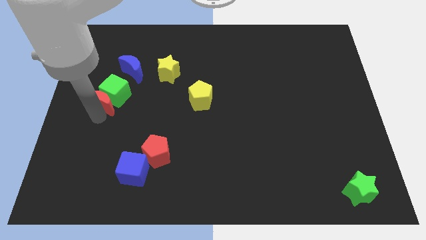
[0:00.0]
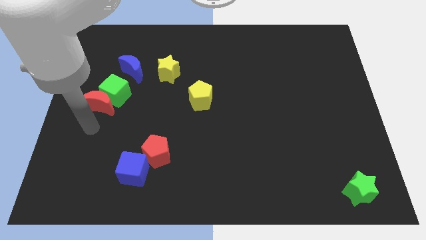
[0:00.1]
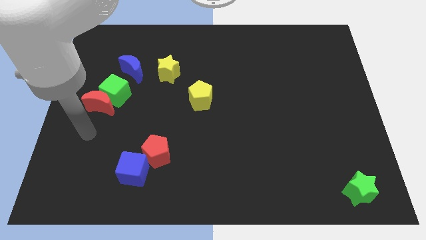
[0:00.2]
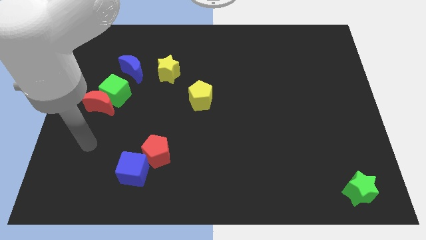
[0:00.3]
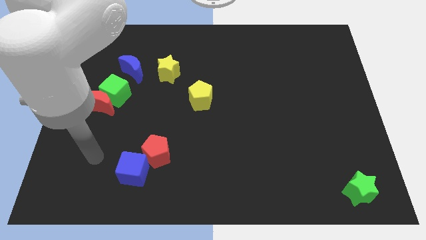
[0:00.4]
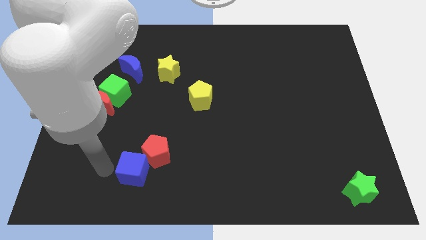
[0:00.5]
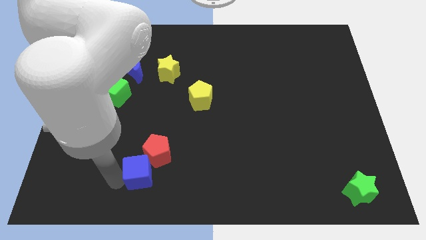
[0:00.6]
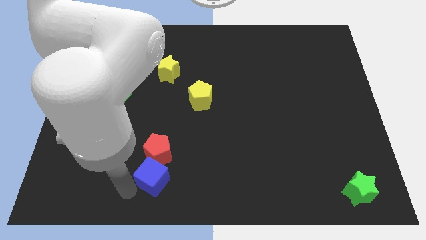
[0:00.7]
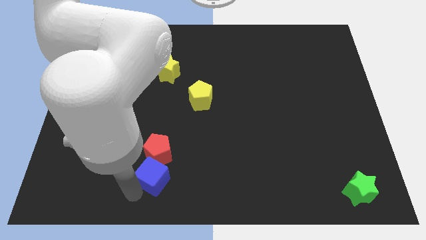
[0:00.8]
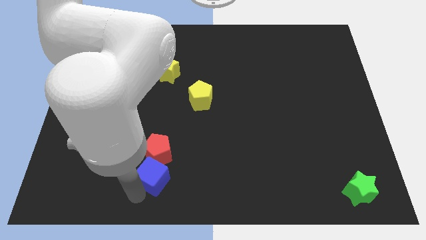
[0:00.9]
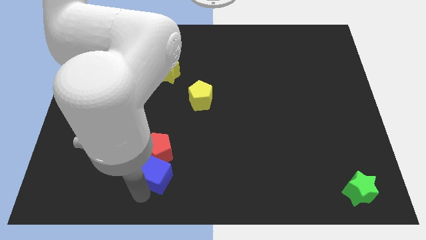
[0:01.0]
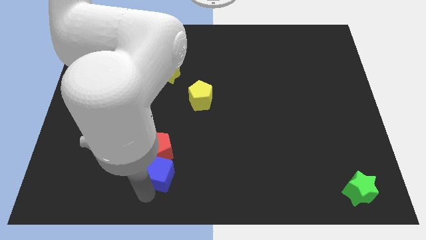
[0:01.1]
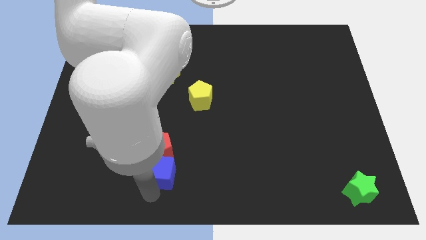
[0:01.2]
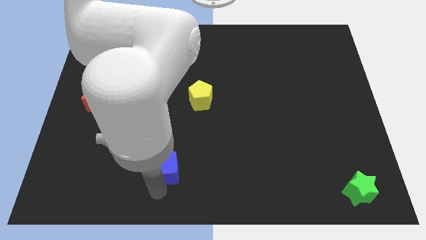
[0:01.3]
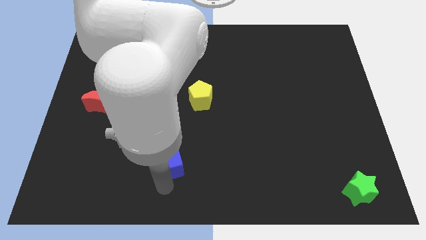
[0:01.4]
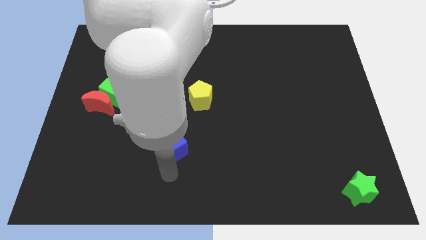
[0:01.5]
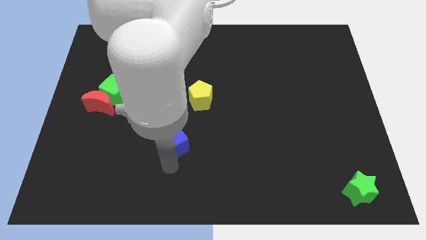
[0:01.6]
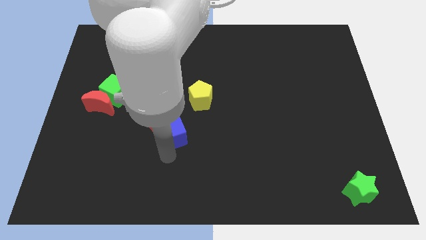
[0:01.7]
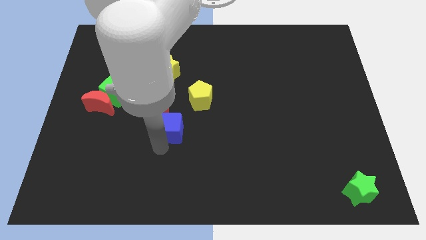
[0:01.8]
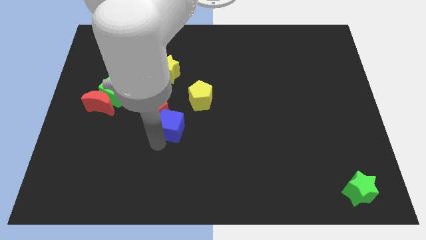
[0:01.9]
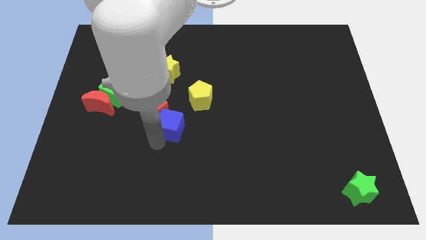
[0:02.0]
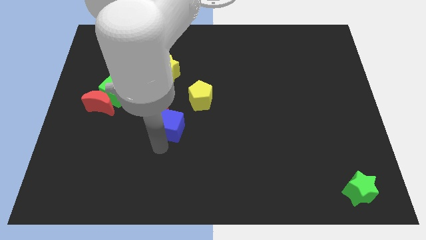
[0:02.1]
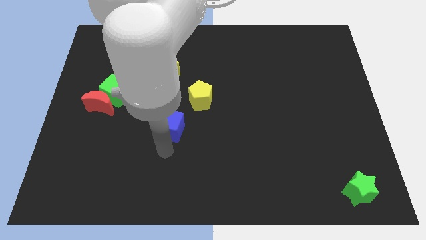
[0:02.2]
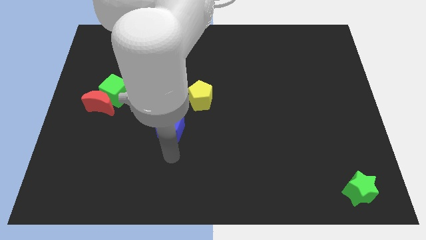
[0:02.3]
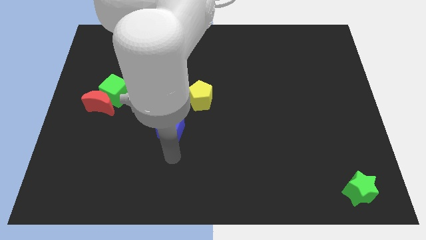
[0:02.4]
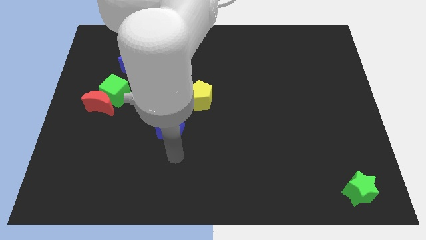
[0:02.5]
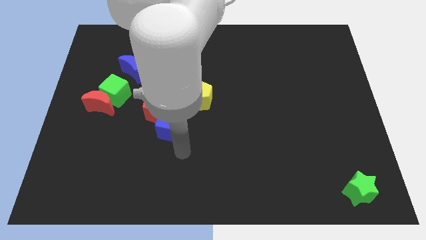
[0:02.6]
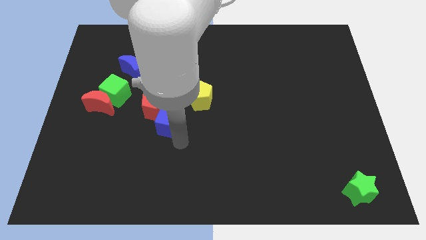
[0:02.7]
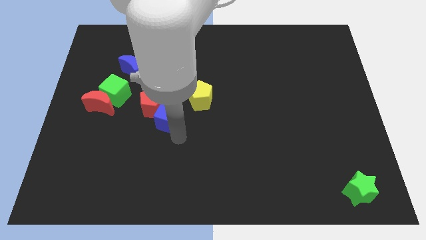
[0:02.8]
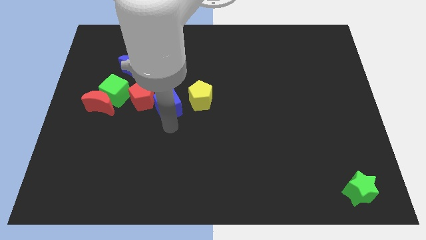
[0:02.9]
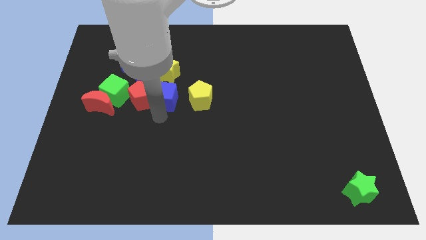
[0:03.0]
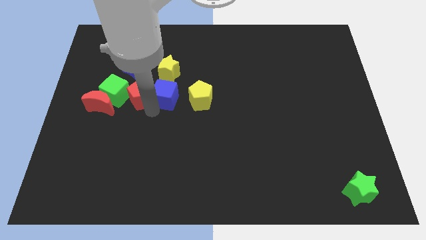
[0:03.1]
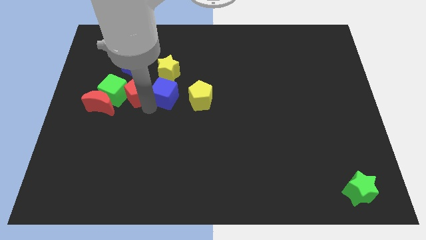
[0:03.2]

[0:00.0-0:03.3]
move the blue cube below to the yellow star

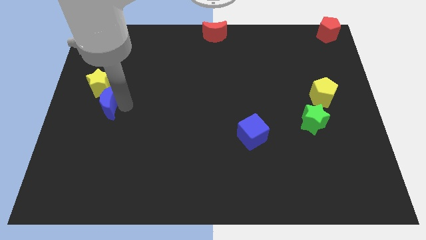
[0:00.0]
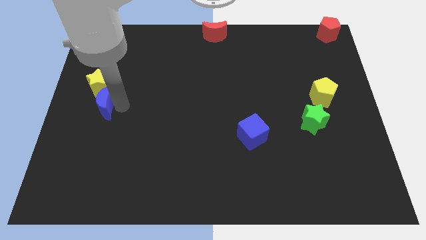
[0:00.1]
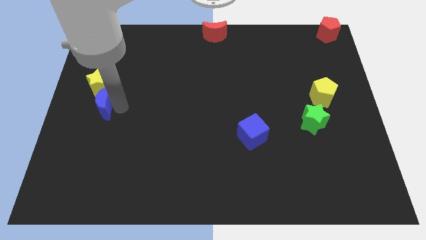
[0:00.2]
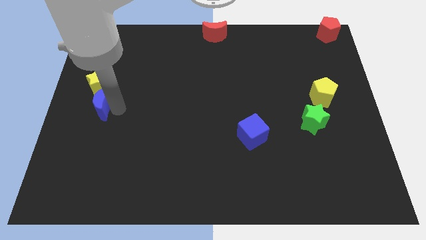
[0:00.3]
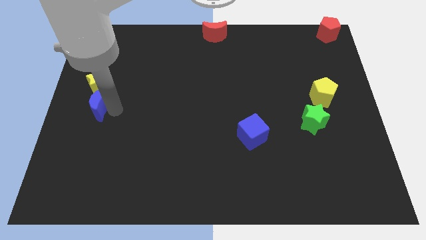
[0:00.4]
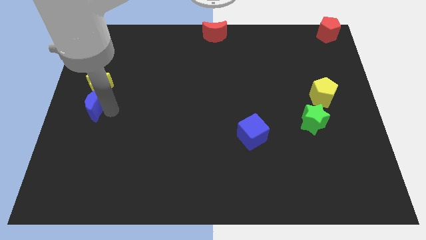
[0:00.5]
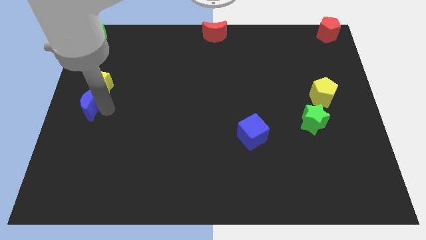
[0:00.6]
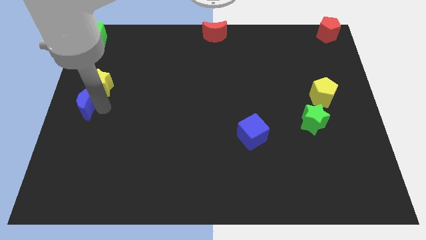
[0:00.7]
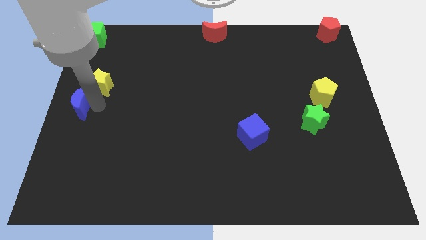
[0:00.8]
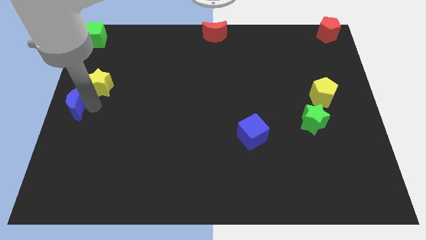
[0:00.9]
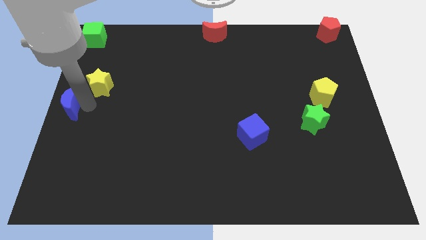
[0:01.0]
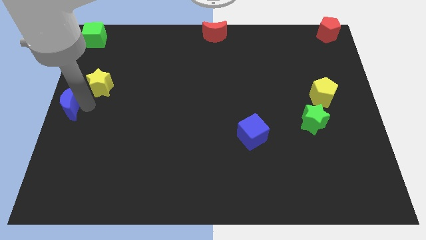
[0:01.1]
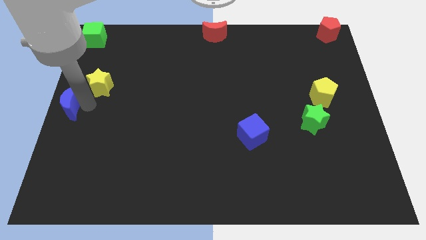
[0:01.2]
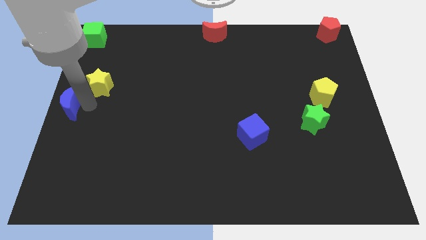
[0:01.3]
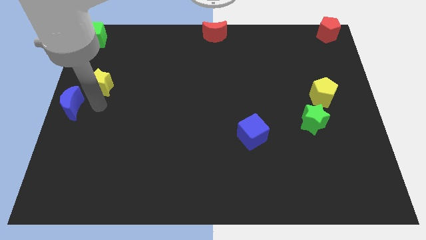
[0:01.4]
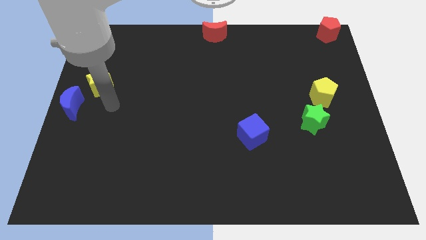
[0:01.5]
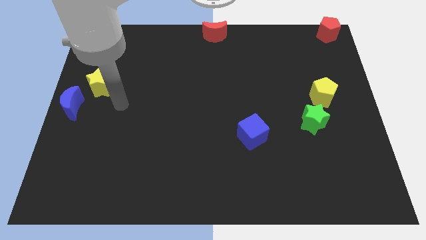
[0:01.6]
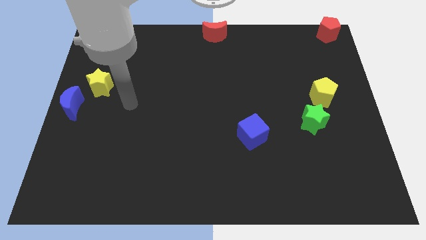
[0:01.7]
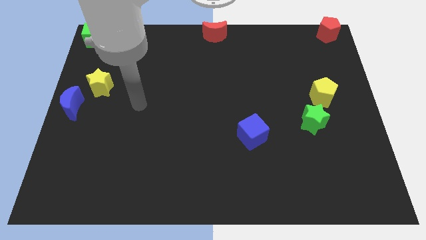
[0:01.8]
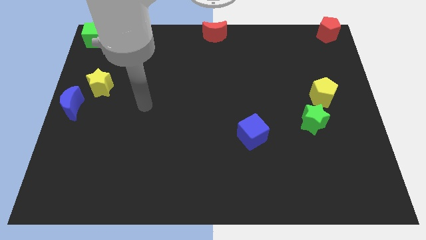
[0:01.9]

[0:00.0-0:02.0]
place the blue crescent at the center left side

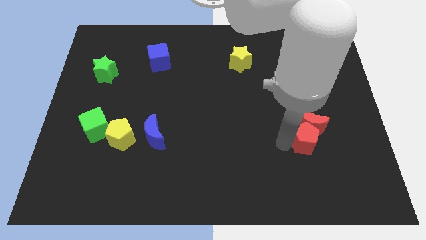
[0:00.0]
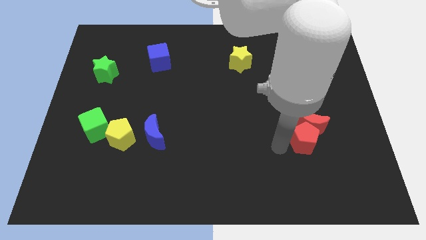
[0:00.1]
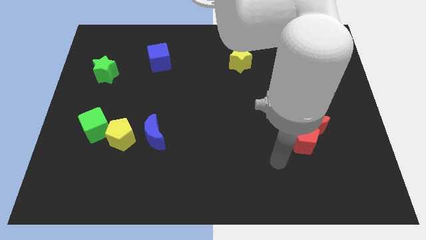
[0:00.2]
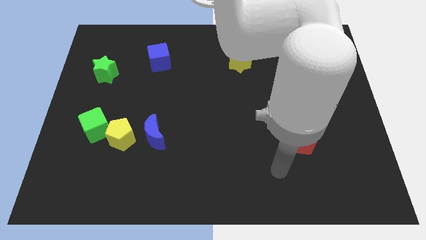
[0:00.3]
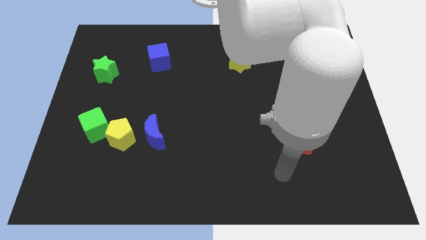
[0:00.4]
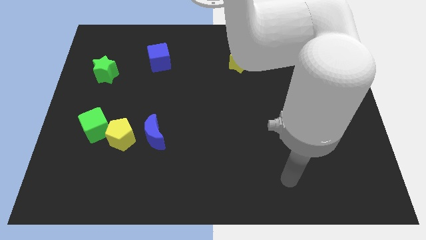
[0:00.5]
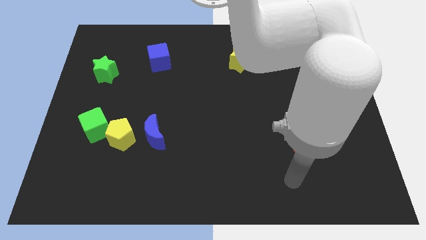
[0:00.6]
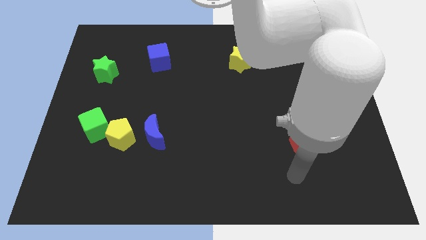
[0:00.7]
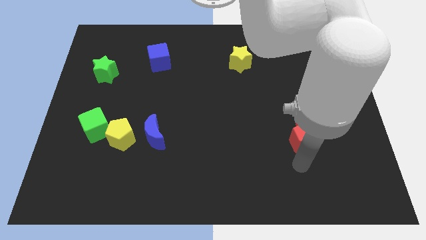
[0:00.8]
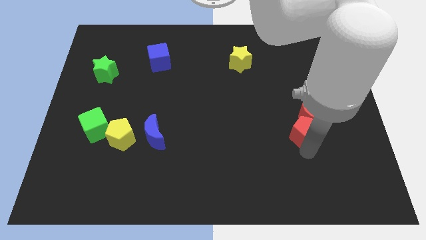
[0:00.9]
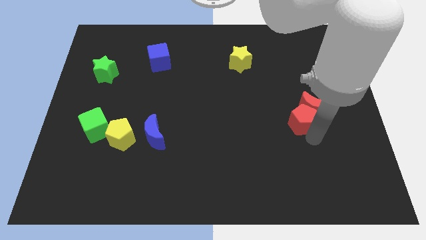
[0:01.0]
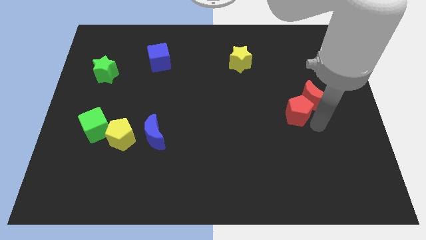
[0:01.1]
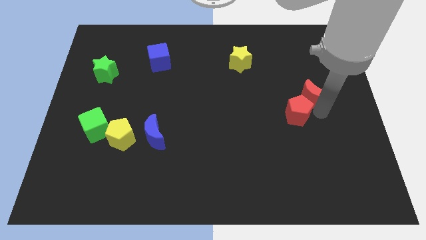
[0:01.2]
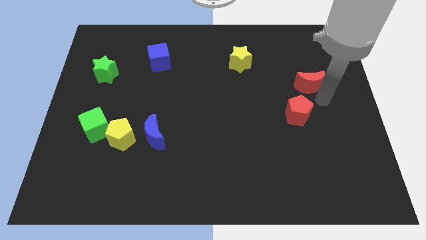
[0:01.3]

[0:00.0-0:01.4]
push the red moon with the red pentagon

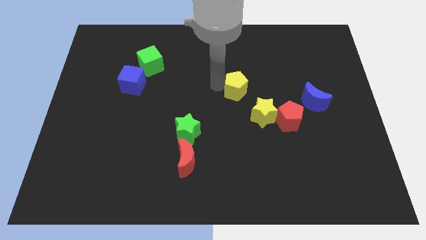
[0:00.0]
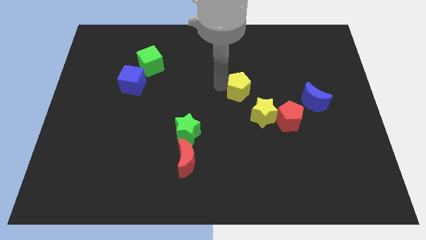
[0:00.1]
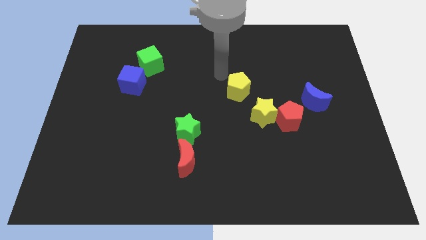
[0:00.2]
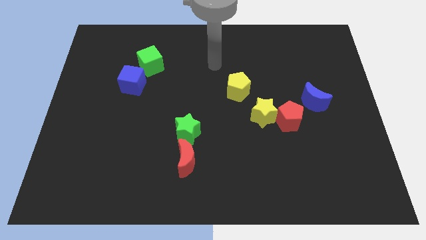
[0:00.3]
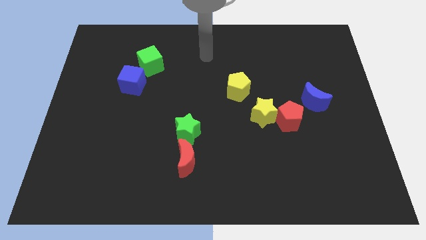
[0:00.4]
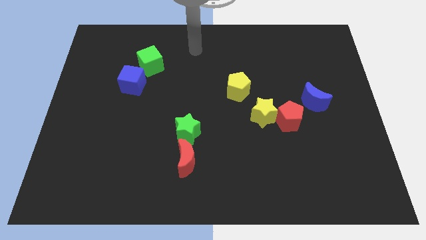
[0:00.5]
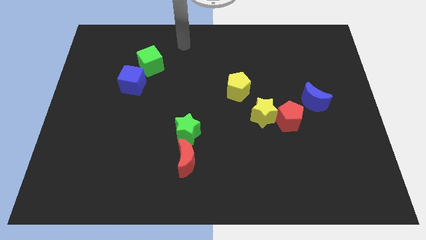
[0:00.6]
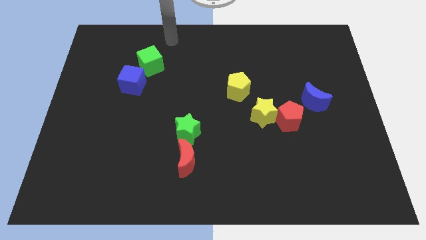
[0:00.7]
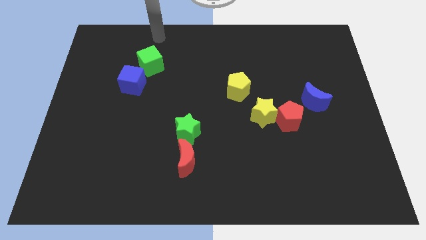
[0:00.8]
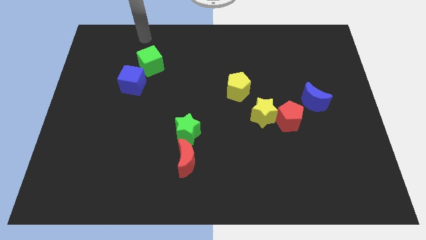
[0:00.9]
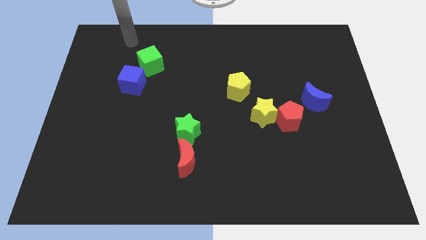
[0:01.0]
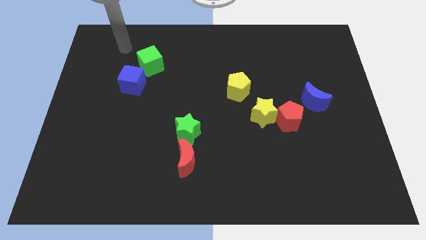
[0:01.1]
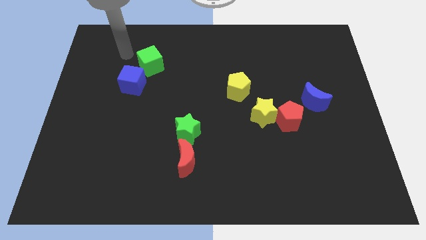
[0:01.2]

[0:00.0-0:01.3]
move your arm towards the green cube

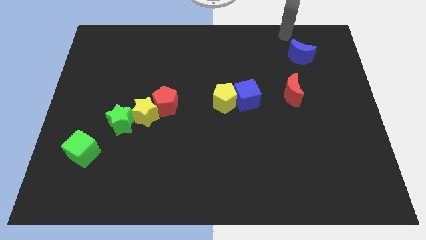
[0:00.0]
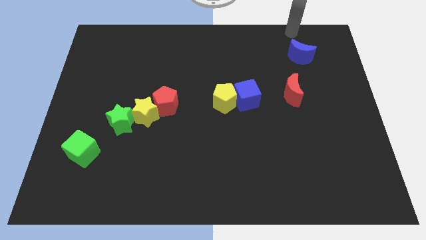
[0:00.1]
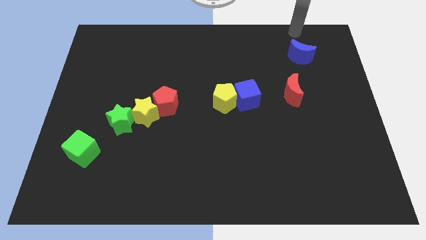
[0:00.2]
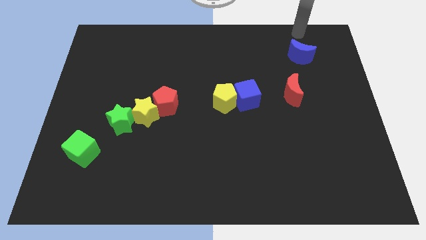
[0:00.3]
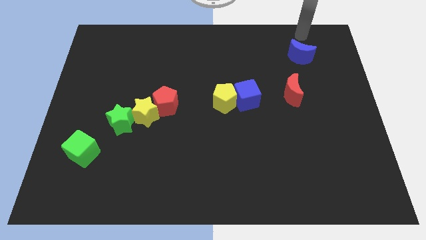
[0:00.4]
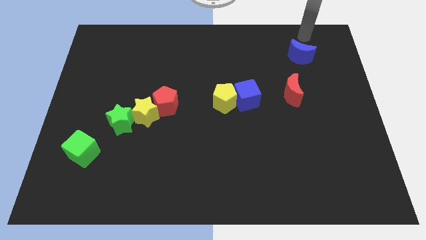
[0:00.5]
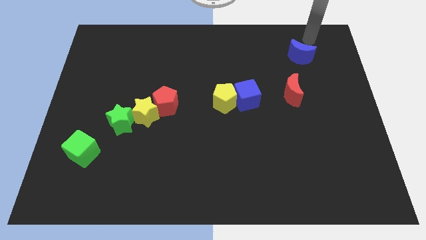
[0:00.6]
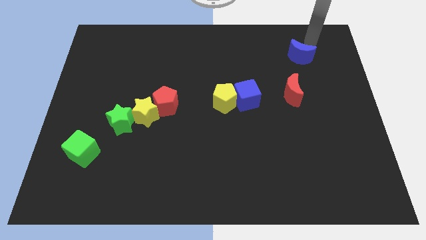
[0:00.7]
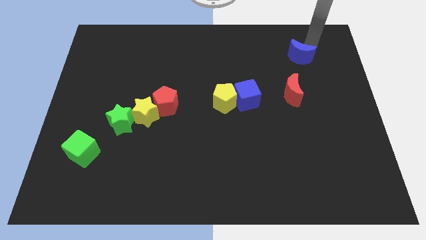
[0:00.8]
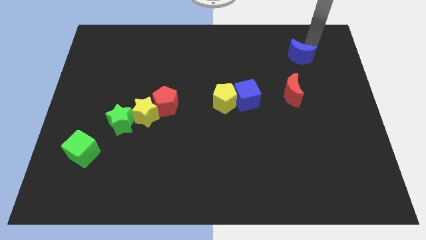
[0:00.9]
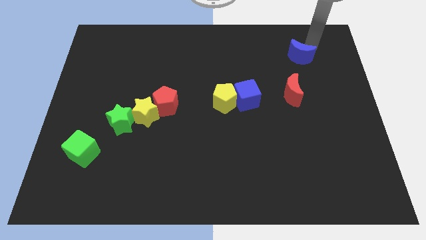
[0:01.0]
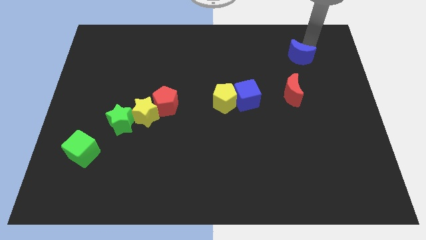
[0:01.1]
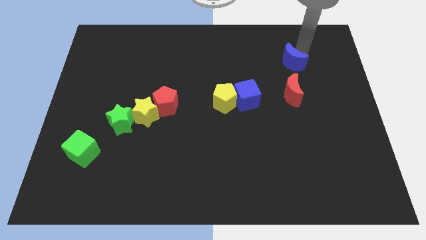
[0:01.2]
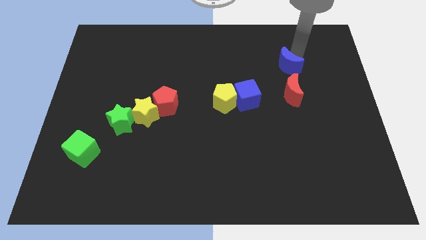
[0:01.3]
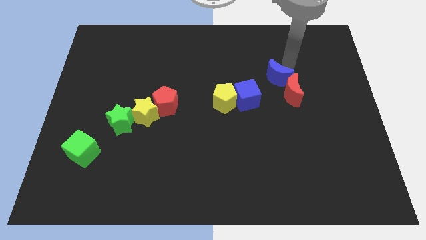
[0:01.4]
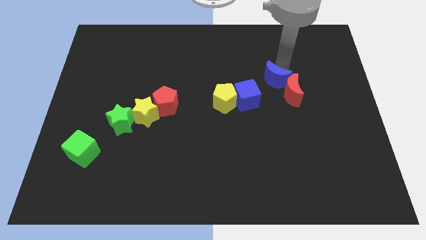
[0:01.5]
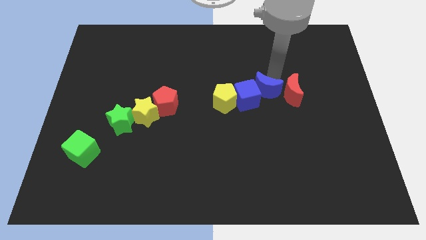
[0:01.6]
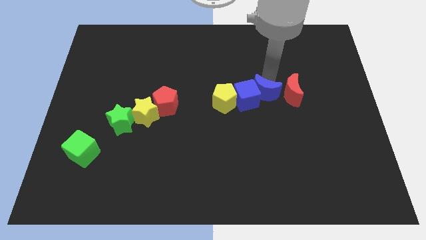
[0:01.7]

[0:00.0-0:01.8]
push the blue moon into the blue cube
